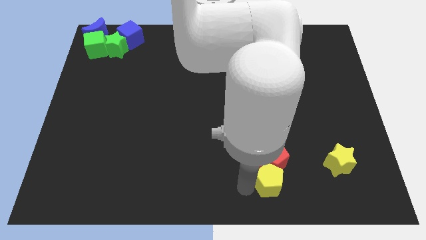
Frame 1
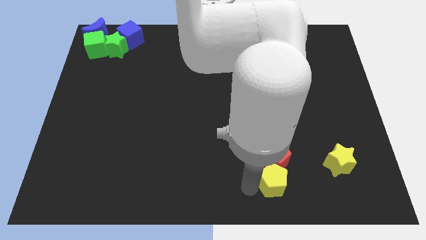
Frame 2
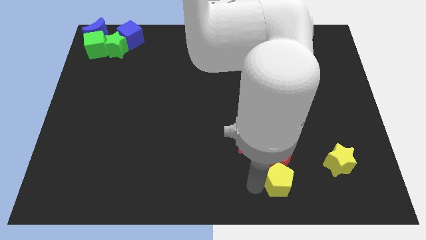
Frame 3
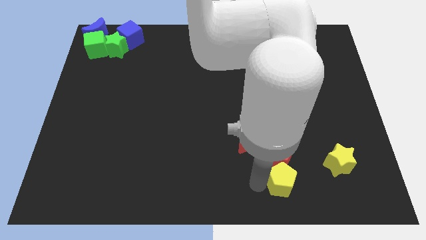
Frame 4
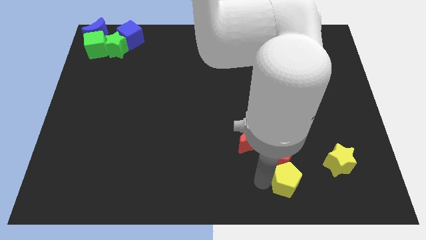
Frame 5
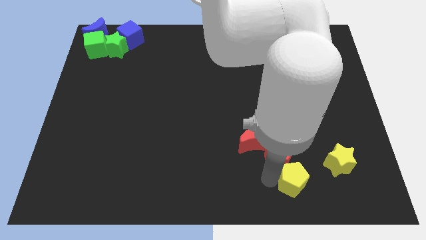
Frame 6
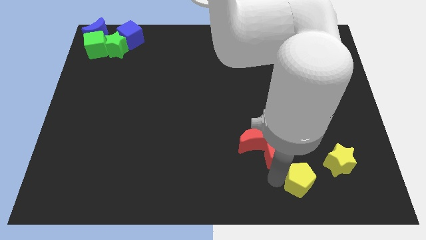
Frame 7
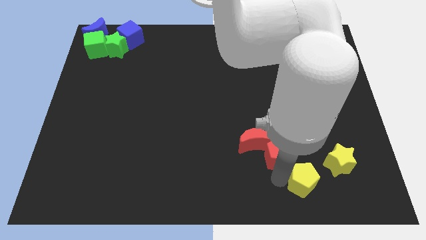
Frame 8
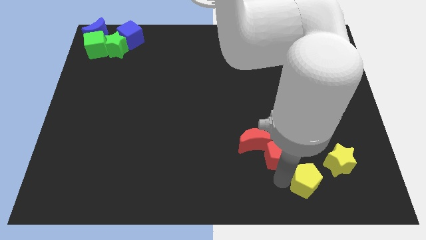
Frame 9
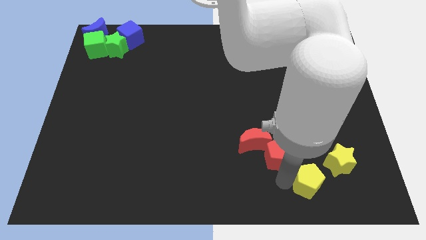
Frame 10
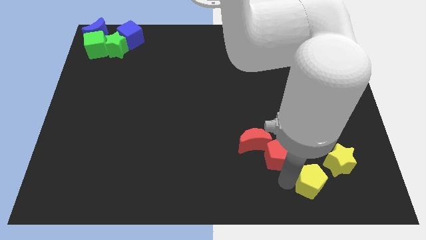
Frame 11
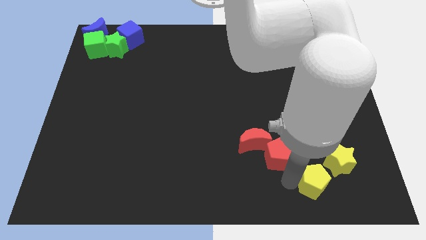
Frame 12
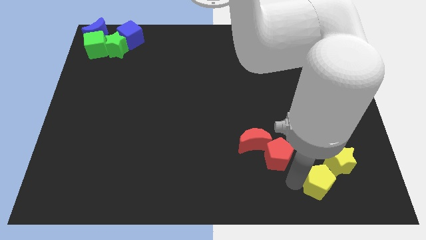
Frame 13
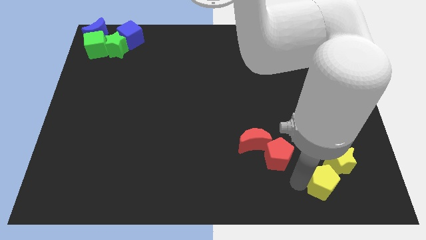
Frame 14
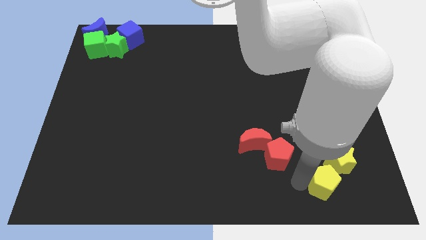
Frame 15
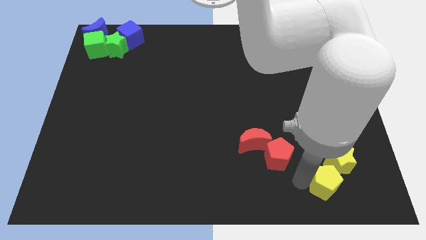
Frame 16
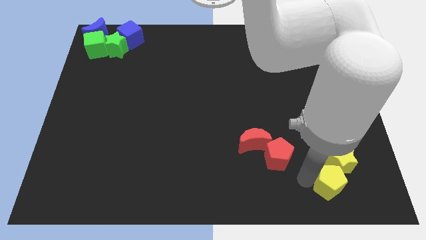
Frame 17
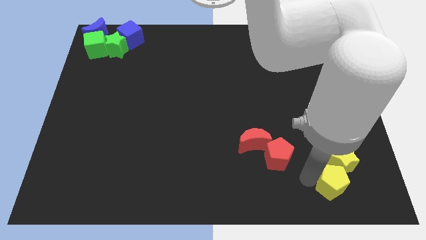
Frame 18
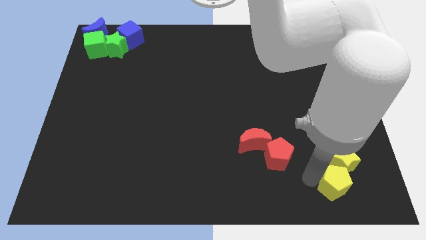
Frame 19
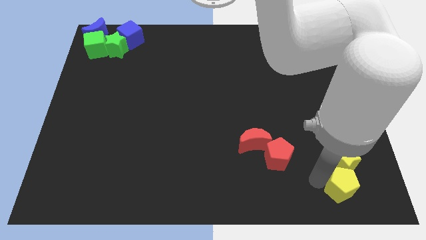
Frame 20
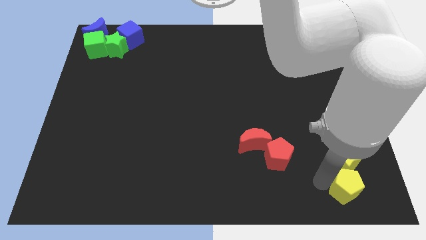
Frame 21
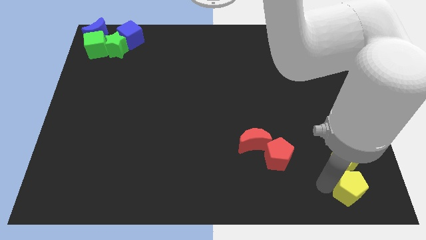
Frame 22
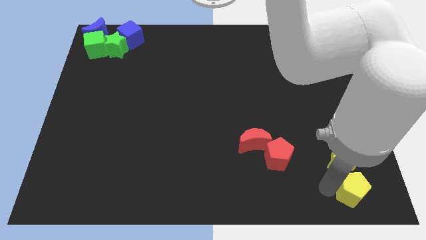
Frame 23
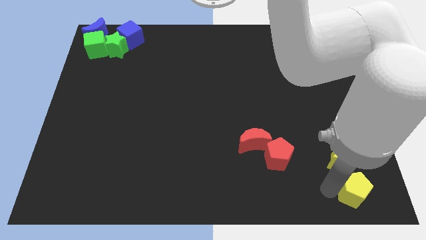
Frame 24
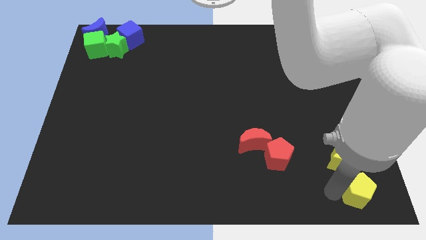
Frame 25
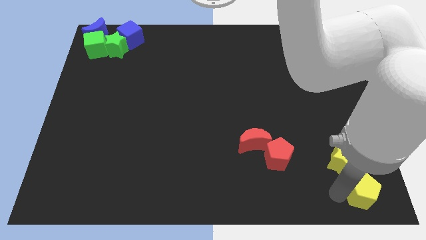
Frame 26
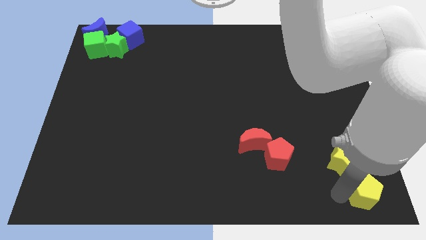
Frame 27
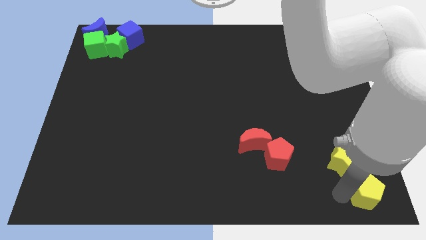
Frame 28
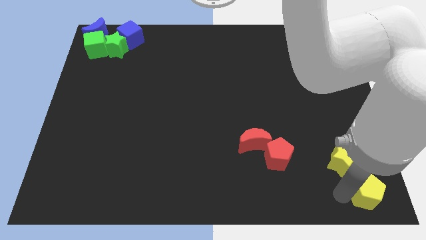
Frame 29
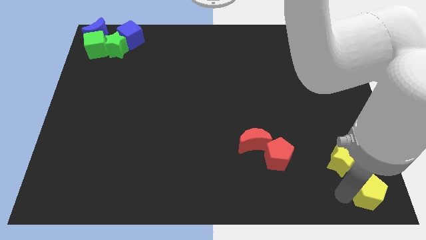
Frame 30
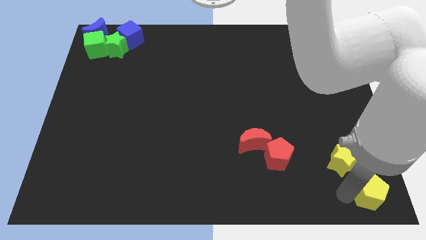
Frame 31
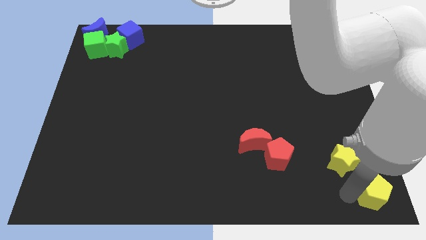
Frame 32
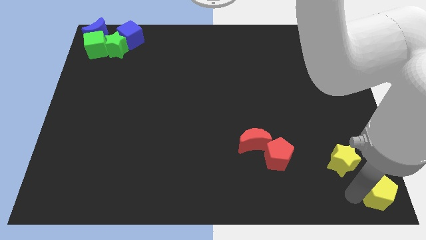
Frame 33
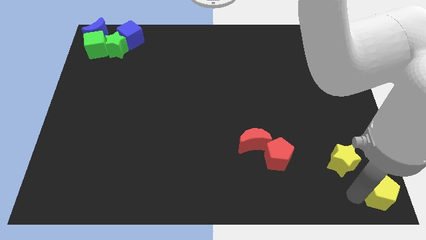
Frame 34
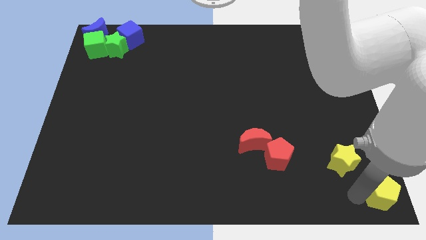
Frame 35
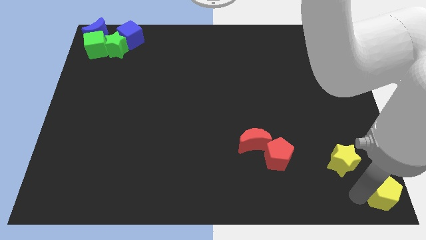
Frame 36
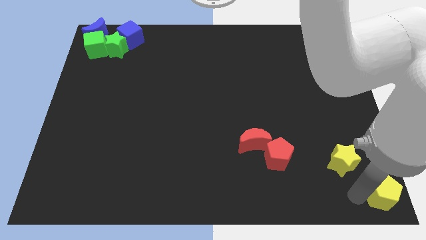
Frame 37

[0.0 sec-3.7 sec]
push the yellow pentagon to the right bottom of the board

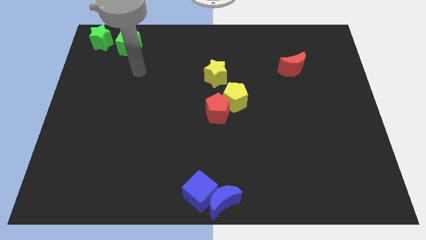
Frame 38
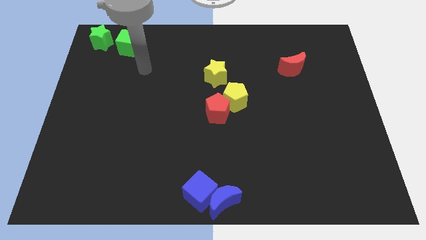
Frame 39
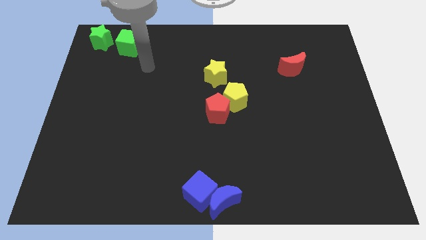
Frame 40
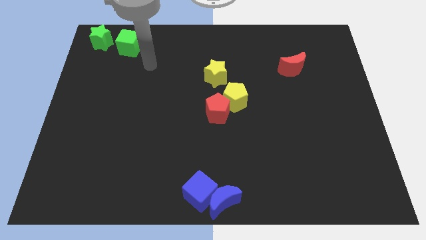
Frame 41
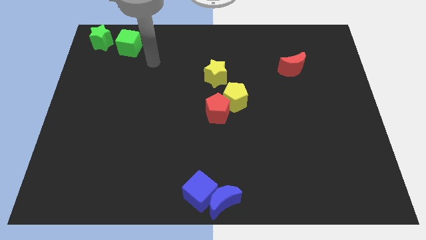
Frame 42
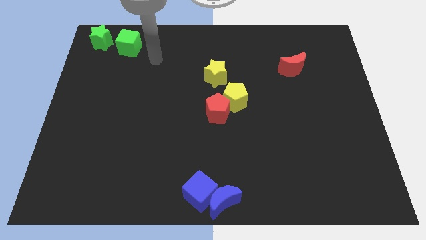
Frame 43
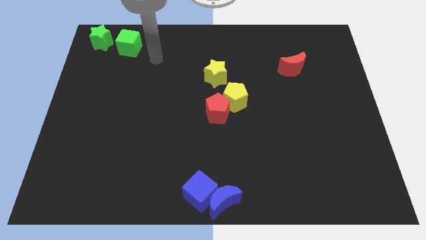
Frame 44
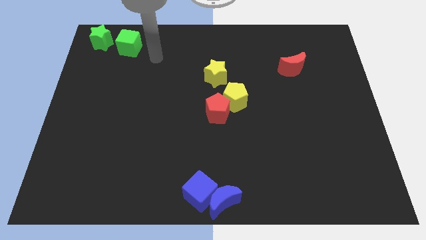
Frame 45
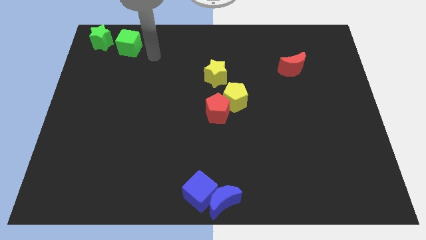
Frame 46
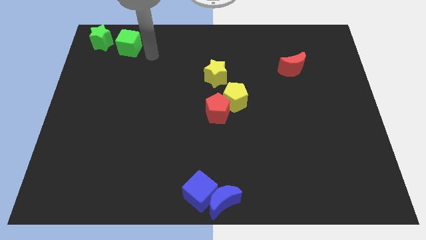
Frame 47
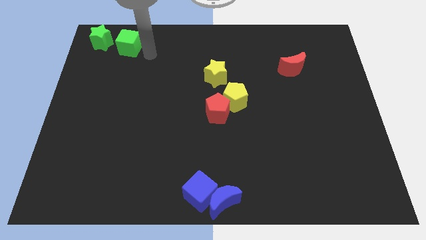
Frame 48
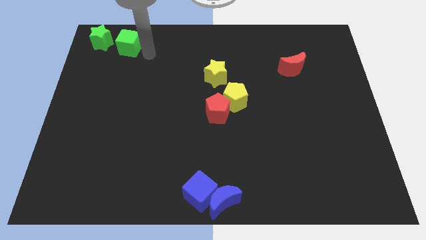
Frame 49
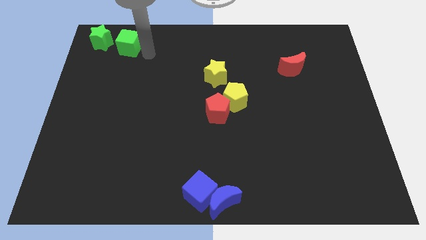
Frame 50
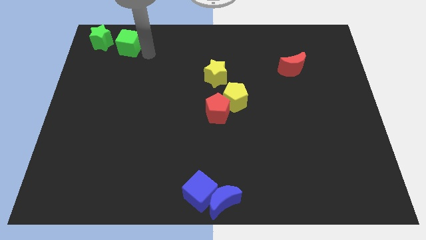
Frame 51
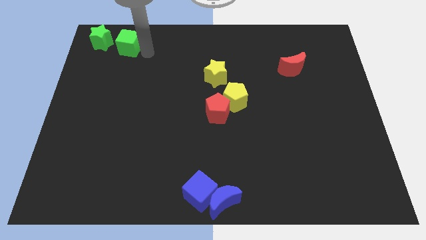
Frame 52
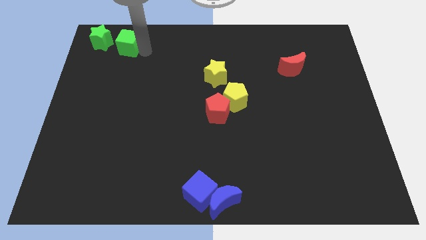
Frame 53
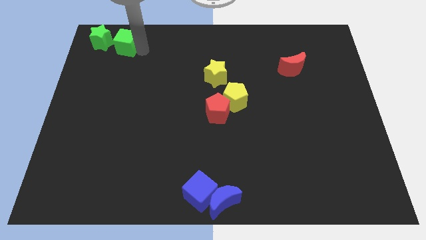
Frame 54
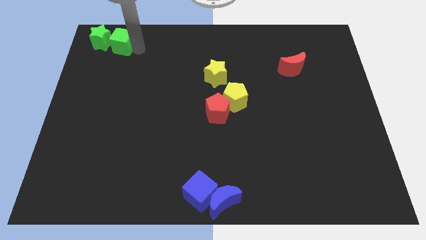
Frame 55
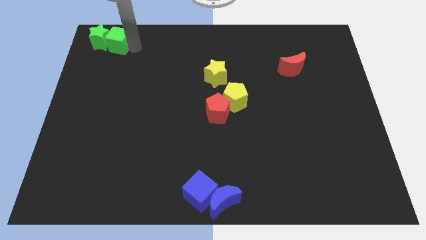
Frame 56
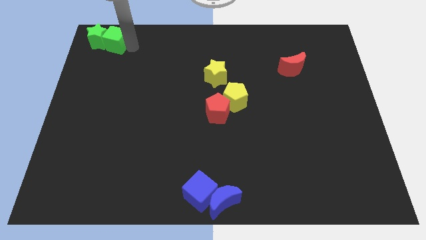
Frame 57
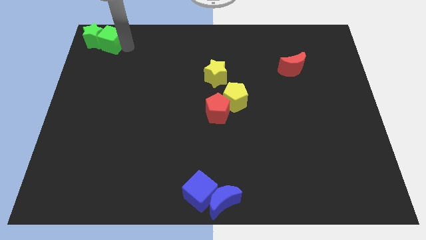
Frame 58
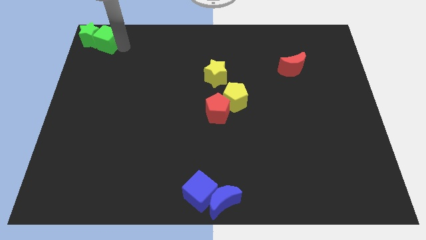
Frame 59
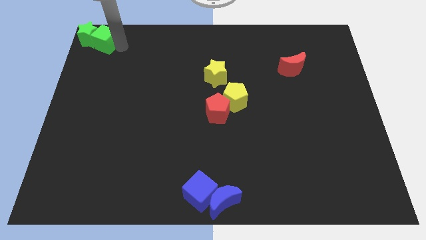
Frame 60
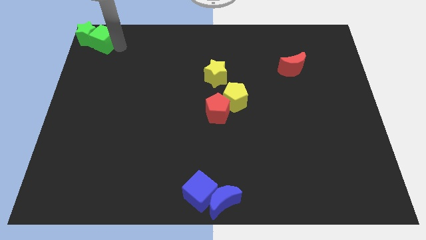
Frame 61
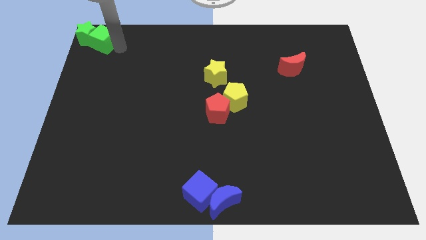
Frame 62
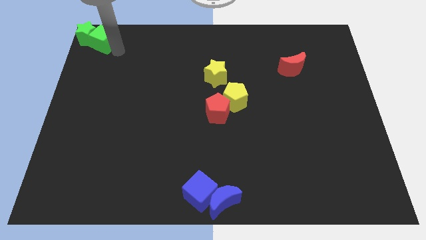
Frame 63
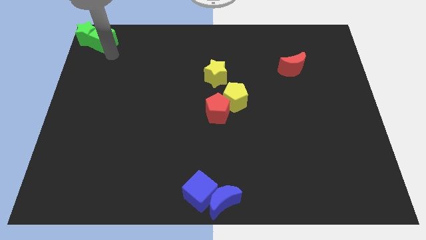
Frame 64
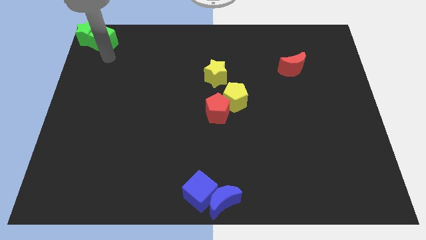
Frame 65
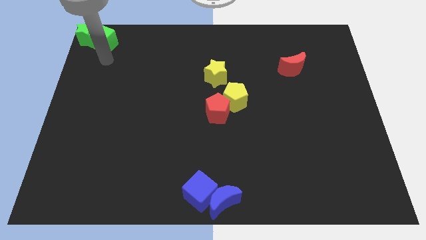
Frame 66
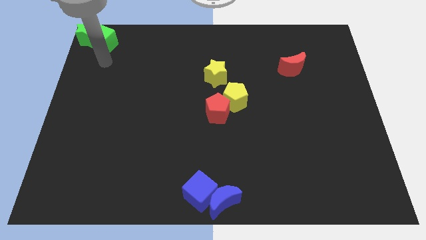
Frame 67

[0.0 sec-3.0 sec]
place green blocks towards top left corner

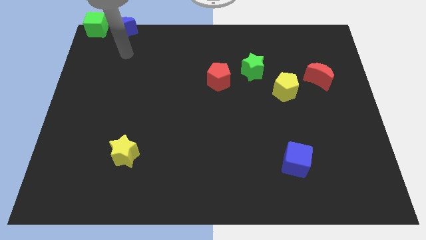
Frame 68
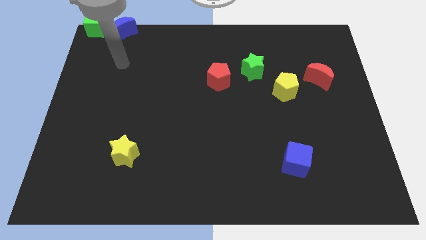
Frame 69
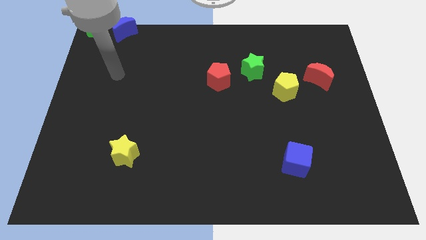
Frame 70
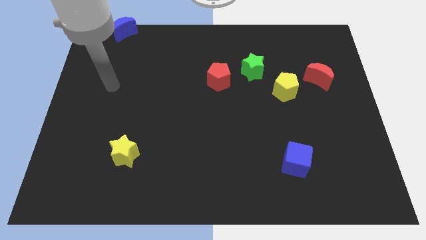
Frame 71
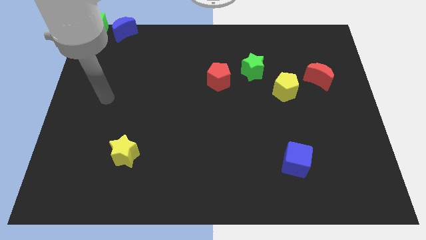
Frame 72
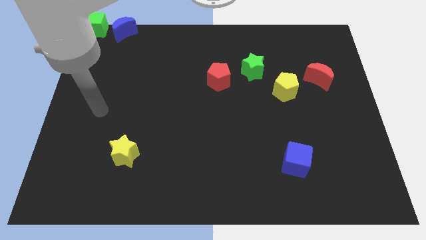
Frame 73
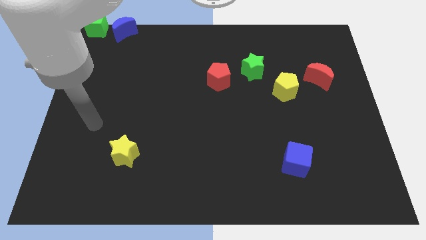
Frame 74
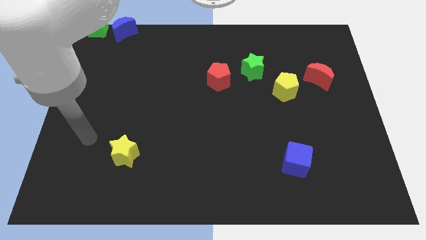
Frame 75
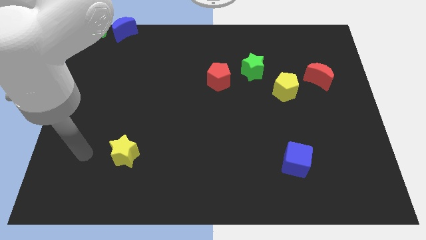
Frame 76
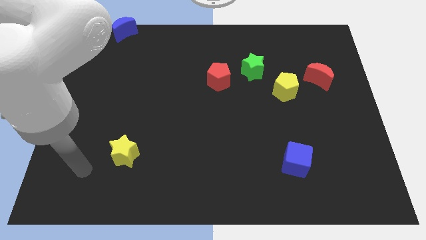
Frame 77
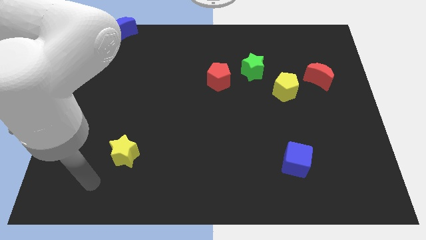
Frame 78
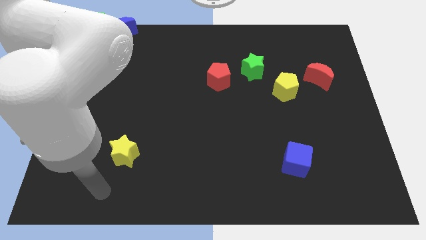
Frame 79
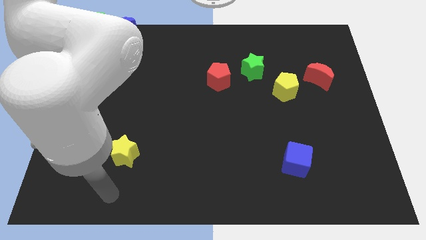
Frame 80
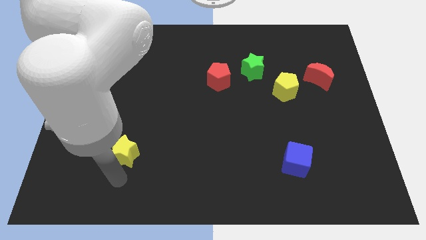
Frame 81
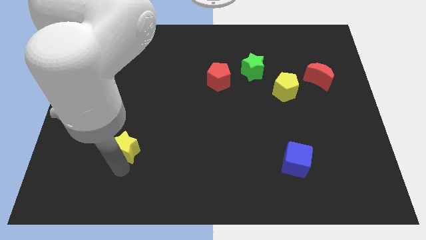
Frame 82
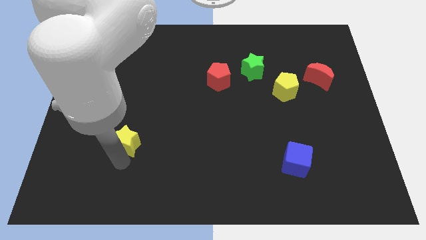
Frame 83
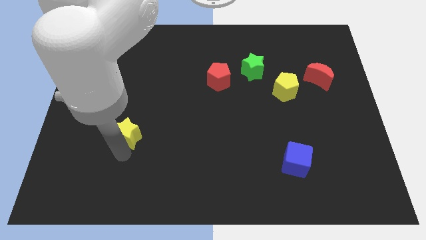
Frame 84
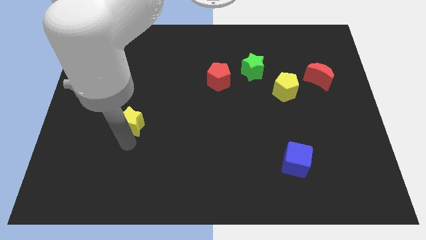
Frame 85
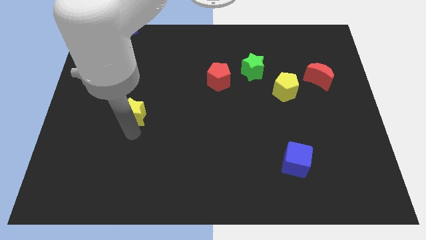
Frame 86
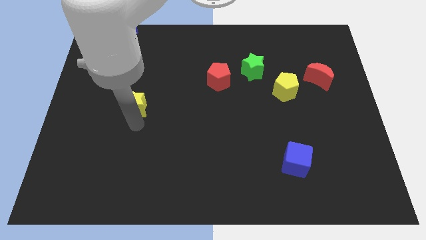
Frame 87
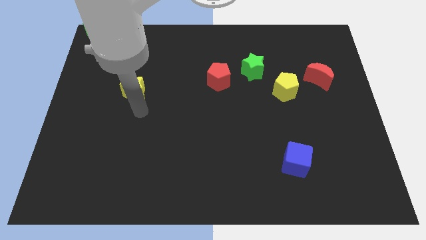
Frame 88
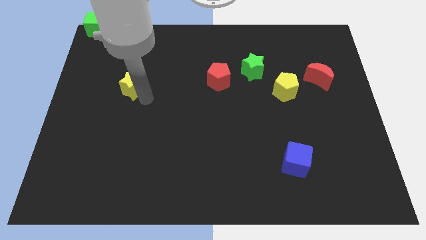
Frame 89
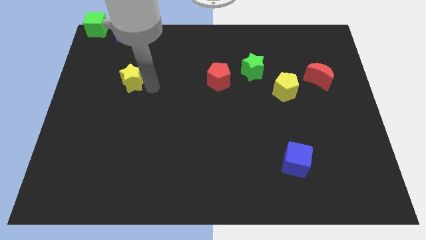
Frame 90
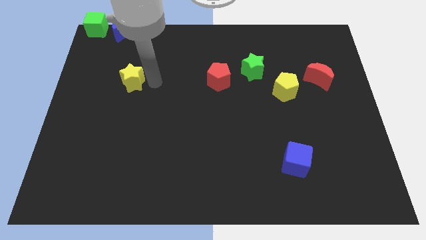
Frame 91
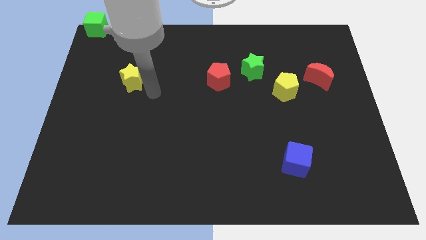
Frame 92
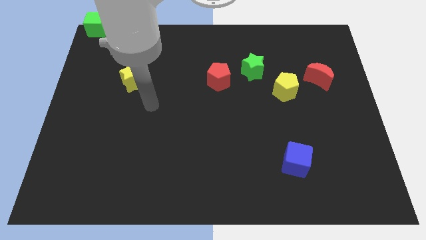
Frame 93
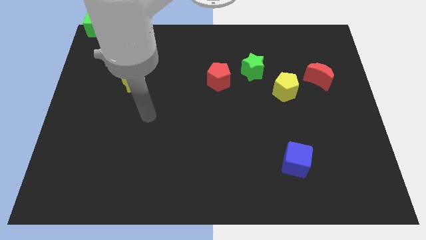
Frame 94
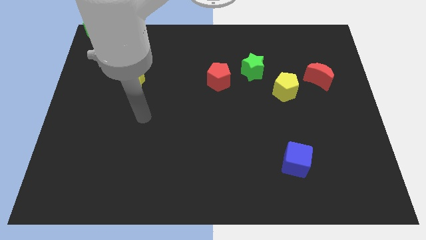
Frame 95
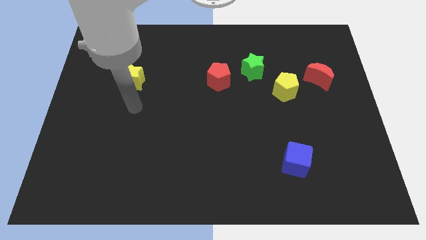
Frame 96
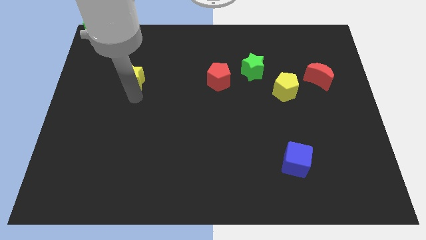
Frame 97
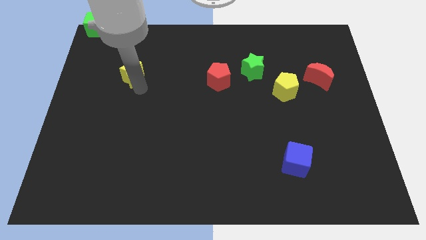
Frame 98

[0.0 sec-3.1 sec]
slide the yellow star towards up
